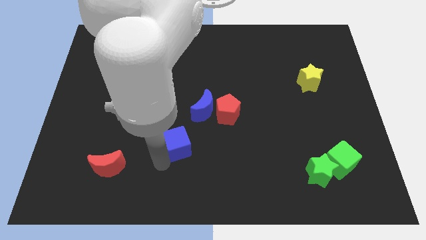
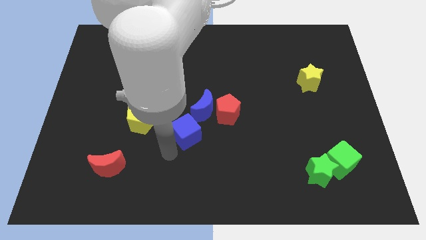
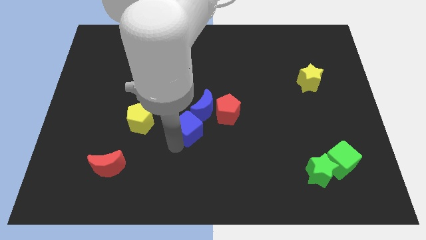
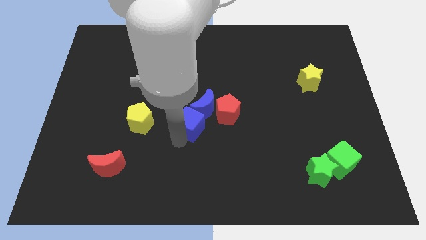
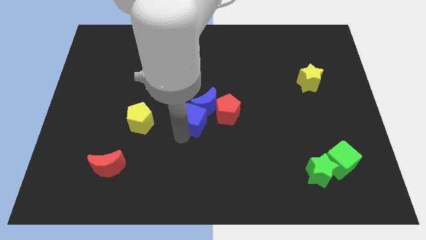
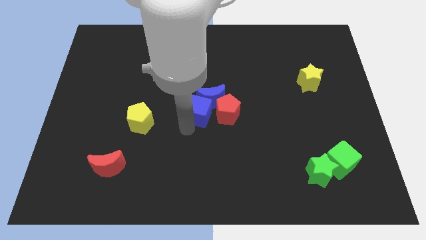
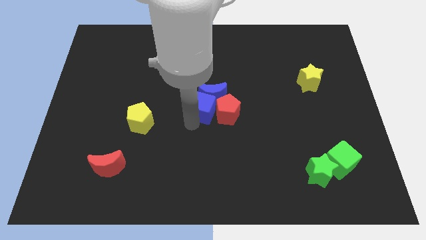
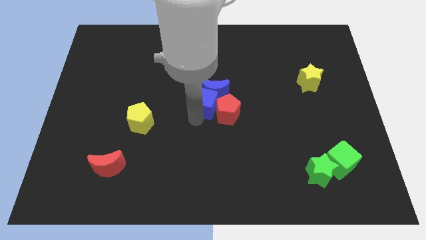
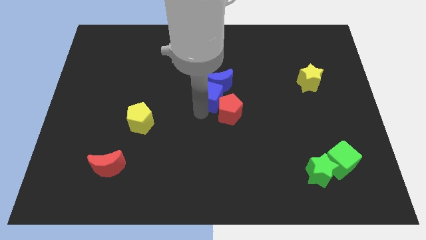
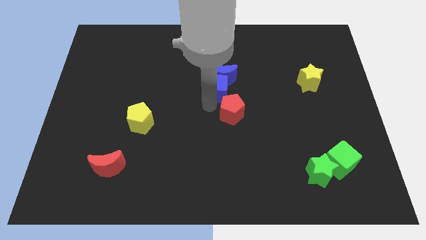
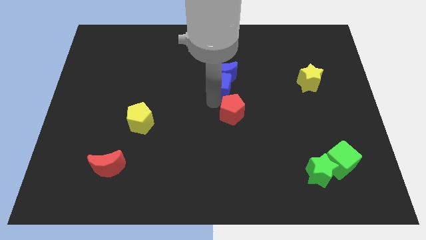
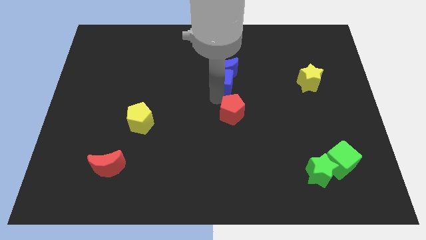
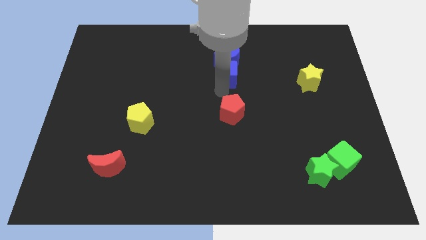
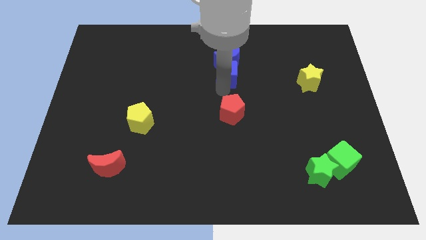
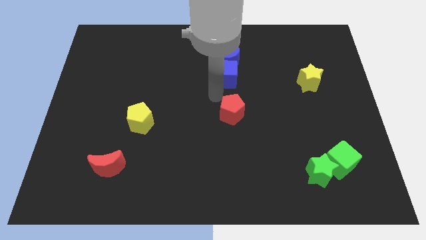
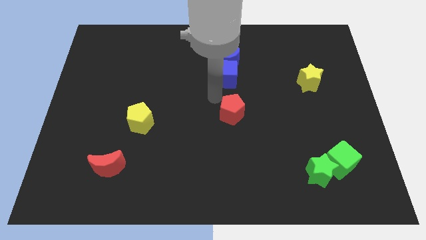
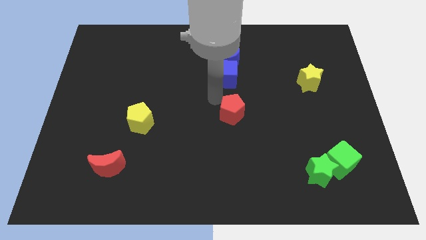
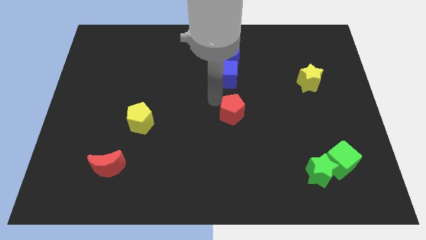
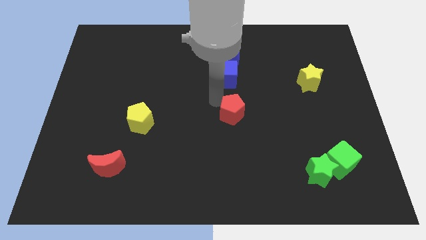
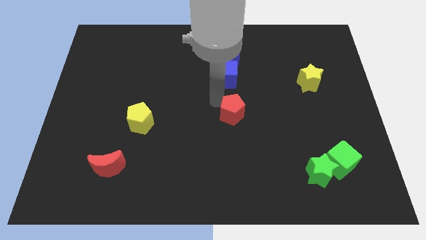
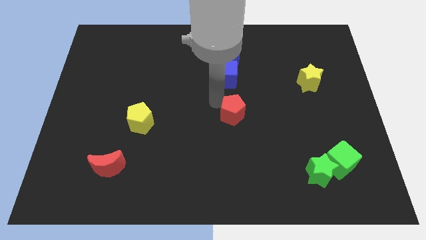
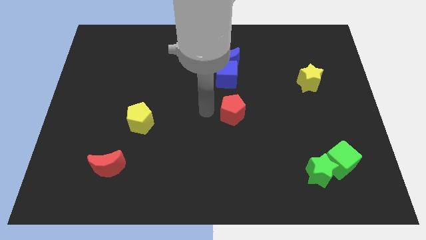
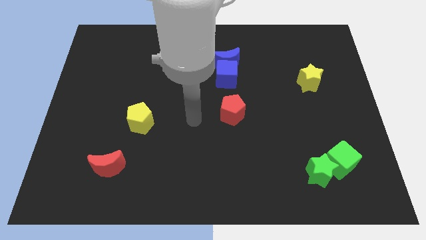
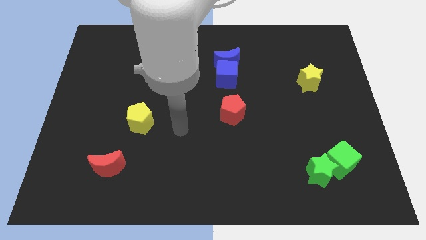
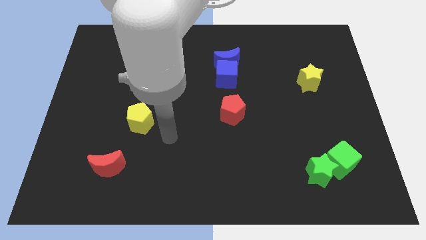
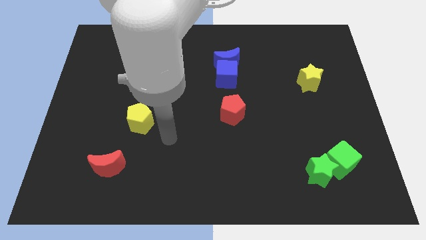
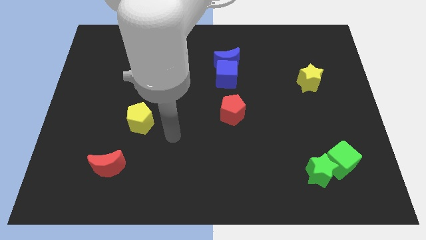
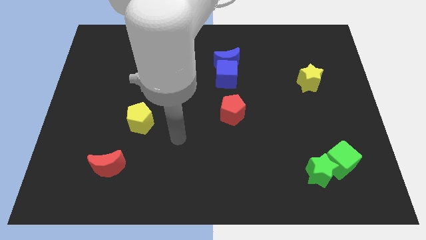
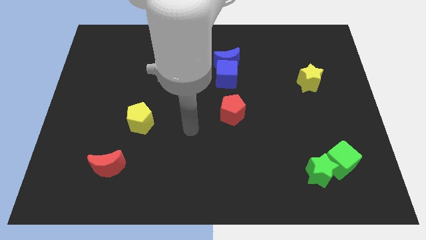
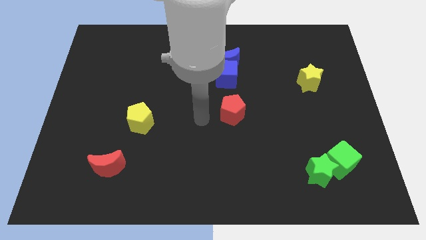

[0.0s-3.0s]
move the blue cube and blue moon towards the top side of the board

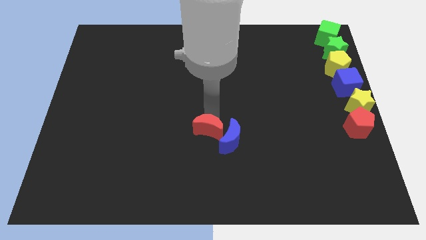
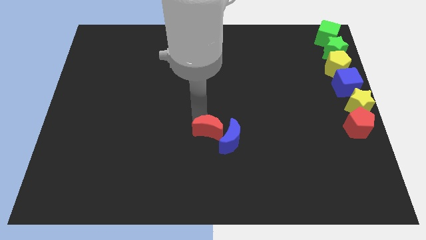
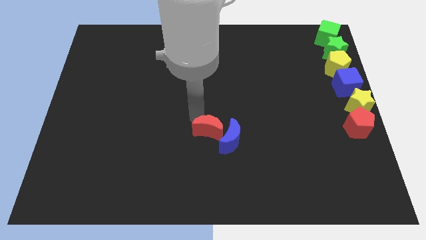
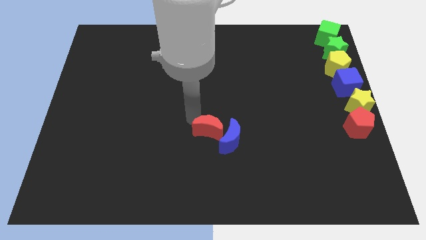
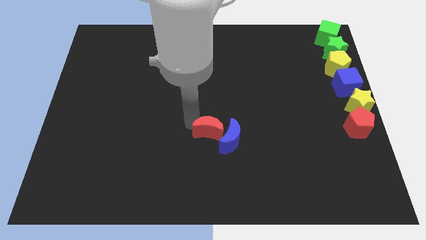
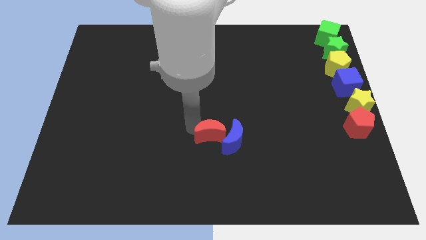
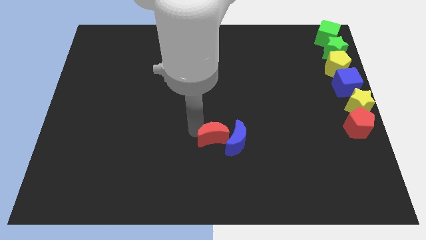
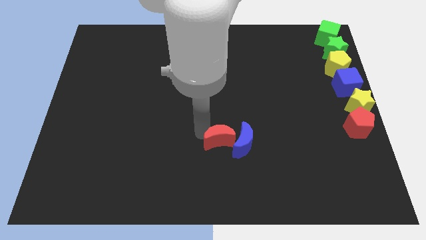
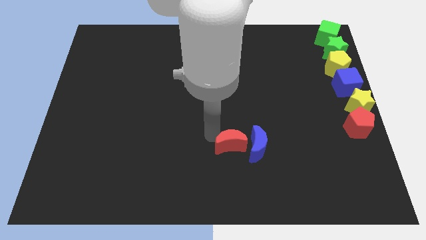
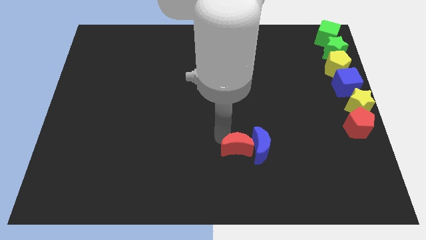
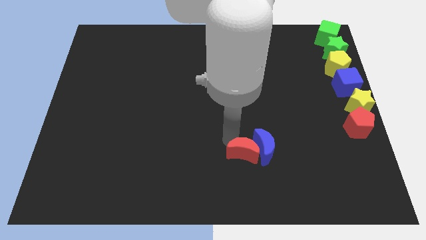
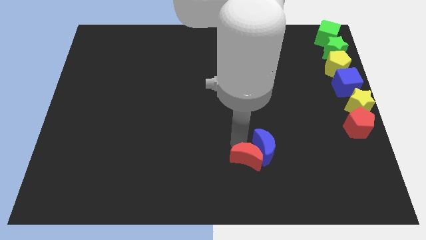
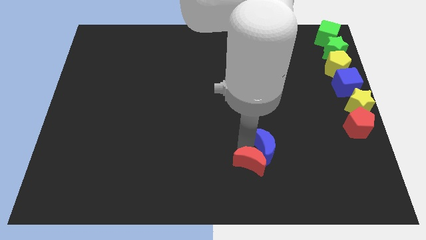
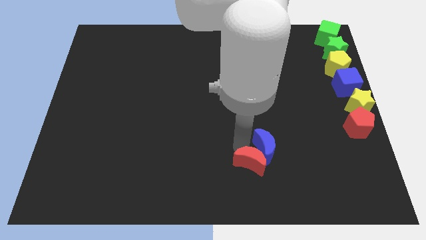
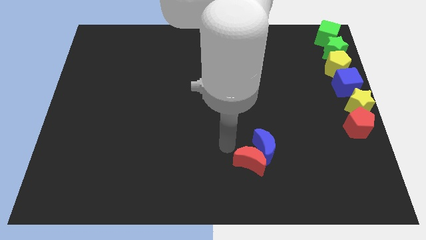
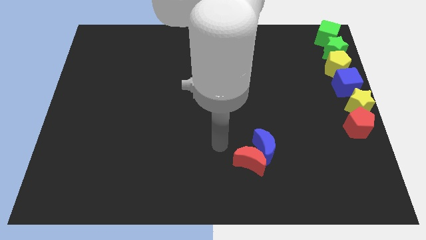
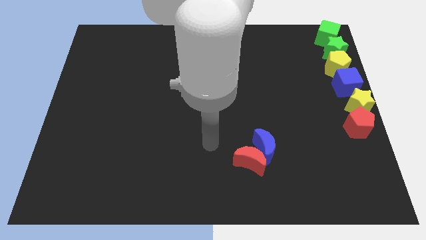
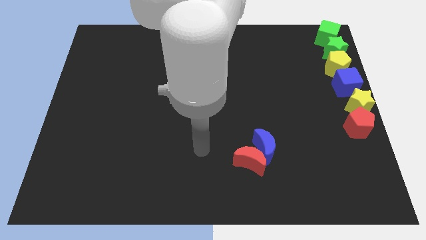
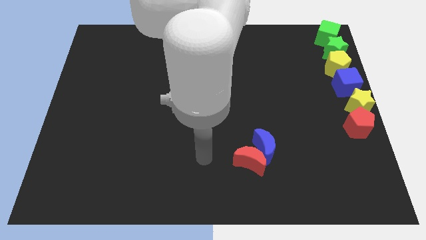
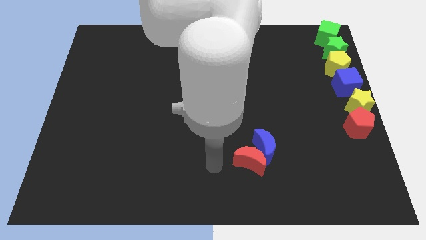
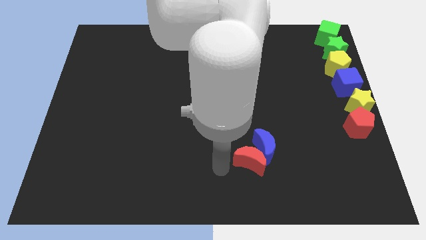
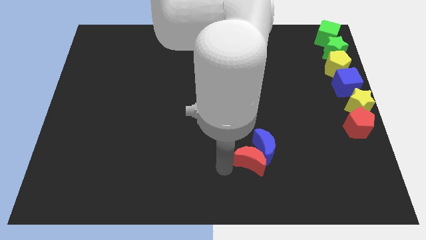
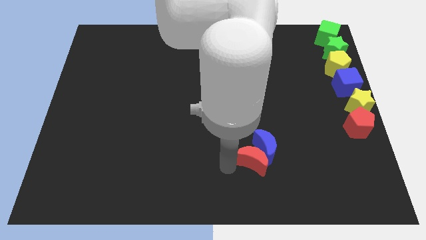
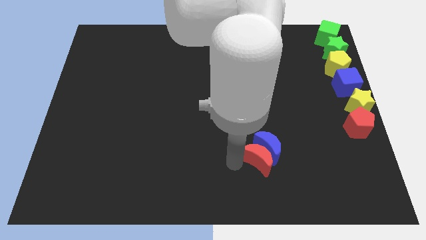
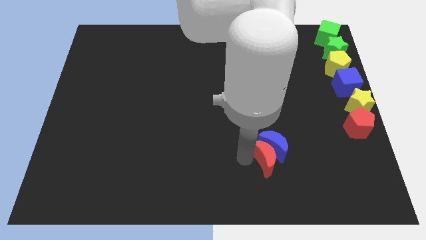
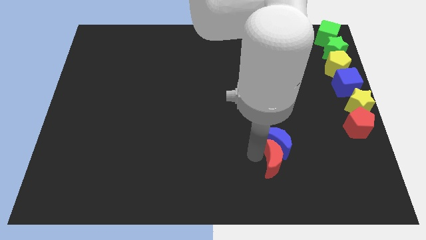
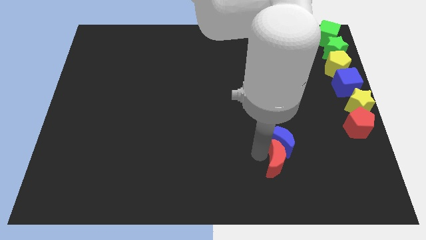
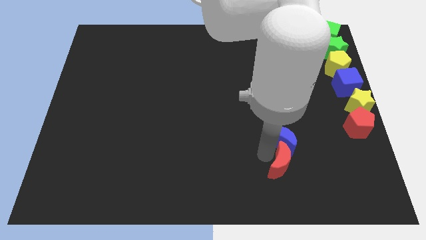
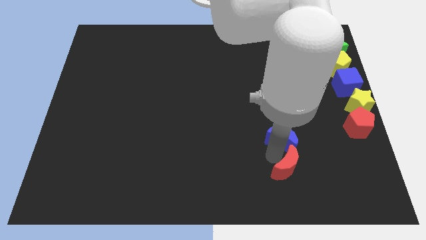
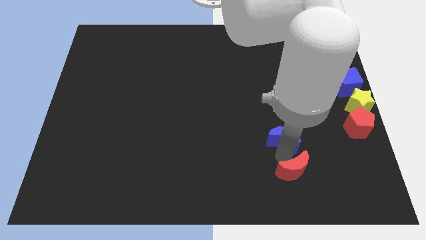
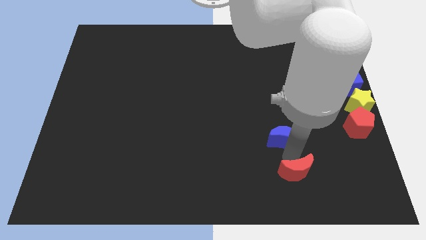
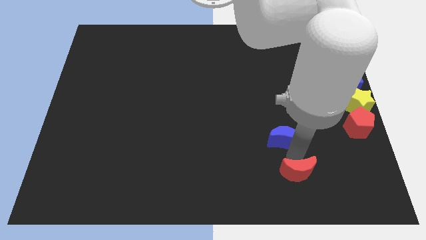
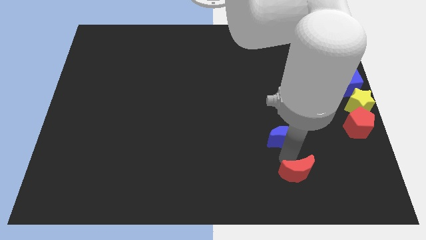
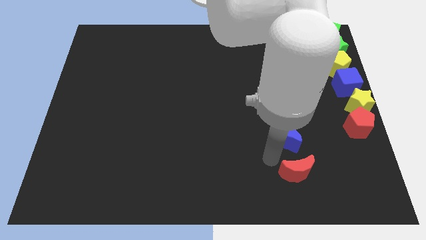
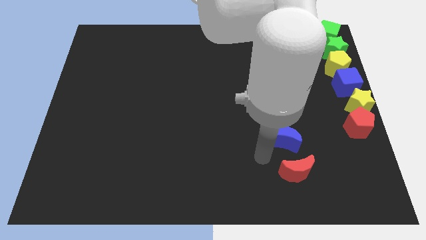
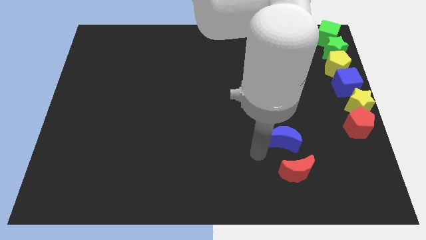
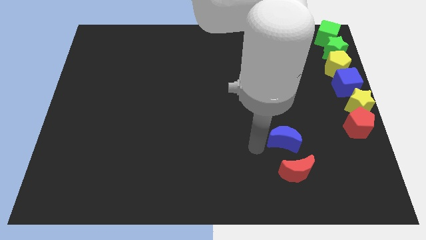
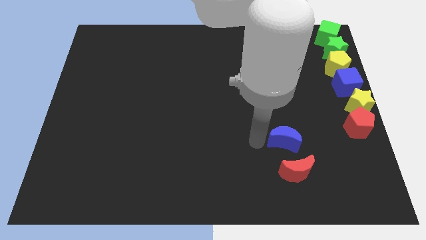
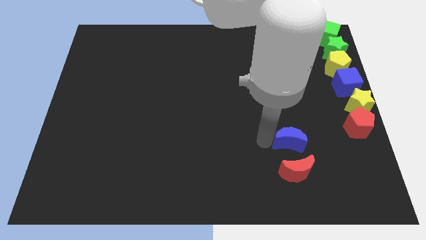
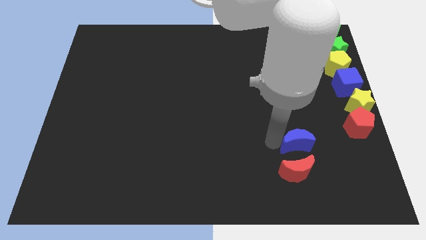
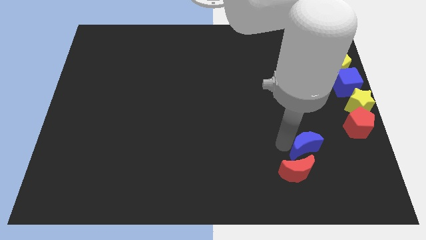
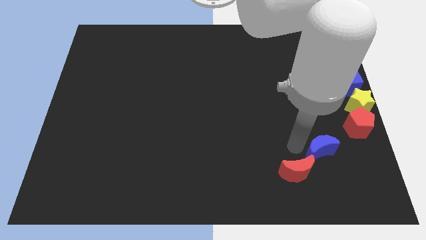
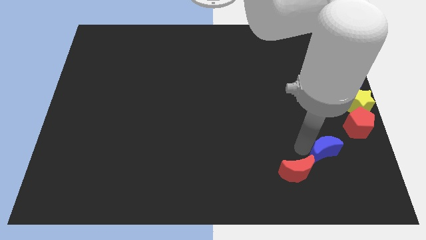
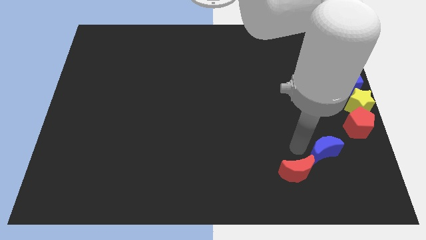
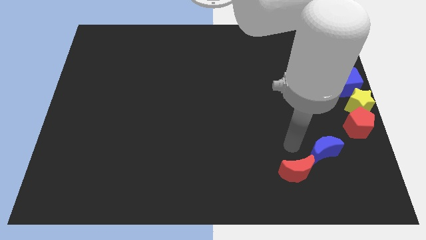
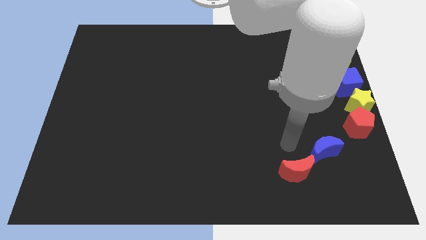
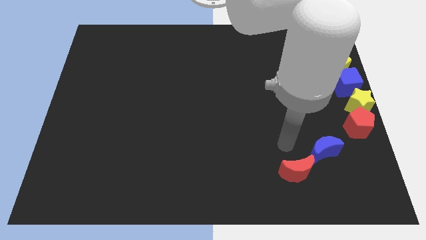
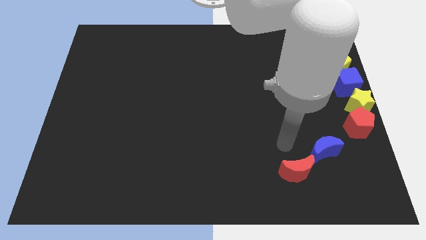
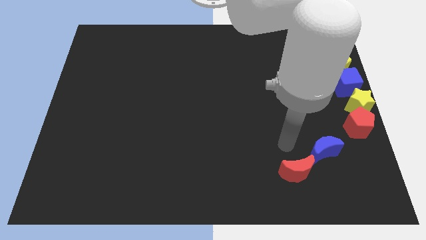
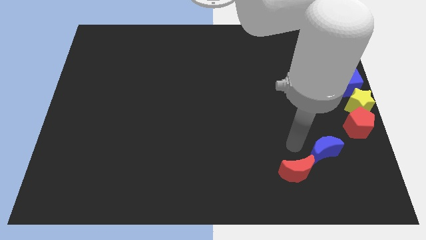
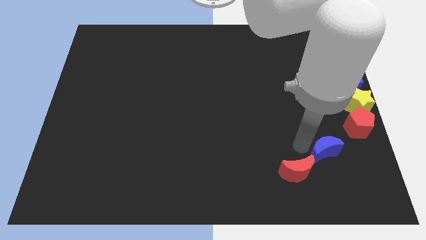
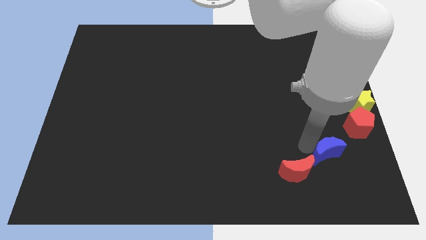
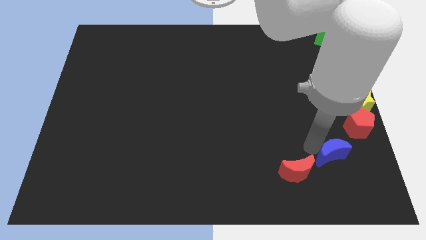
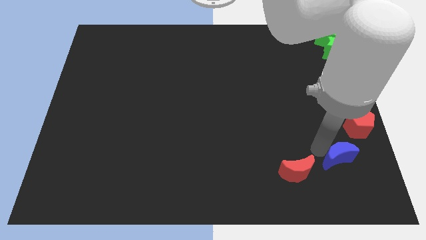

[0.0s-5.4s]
push the crescents to the bottom right of the board

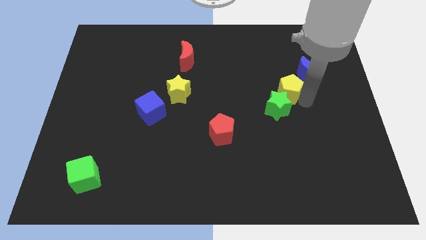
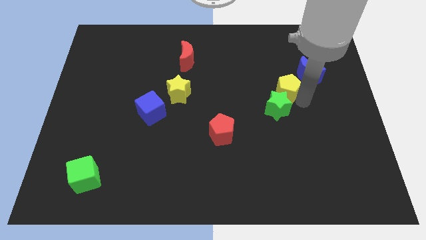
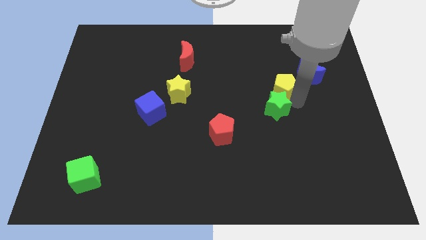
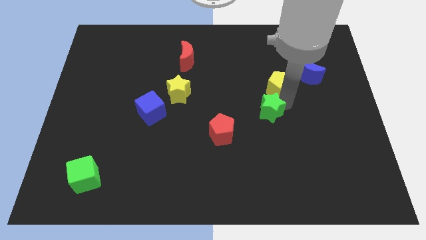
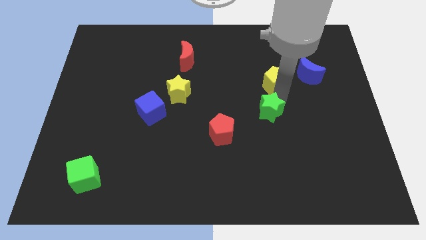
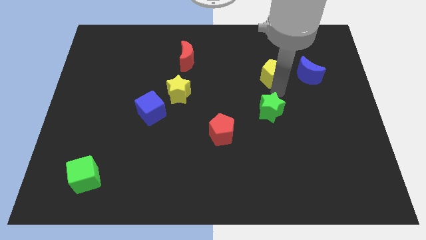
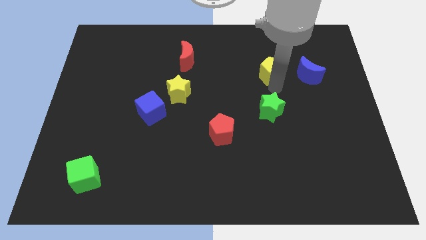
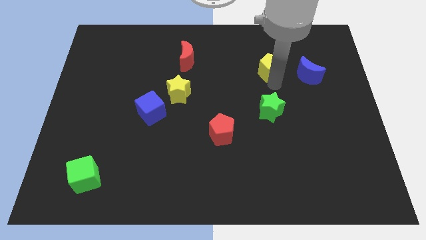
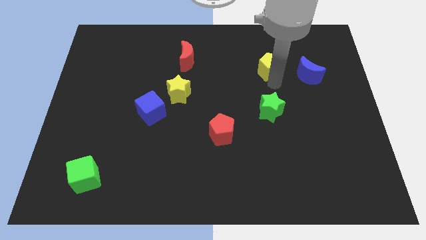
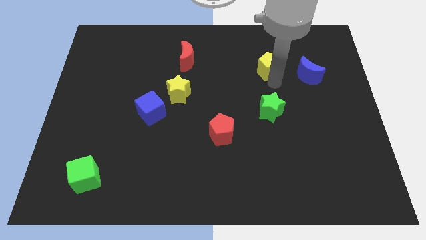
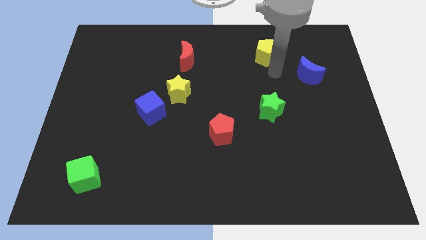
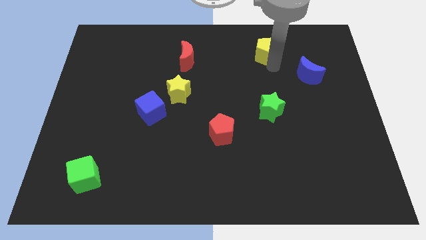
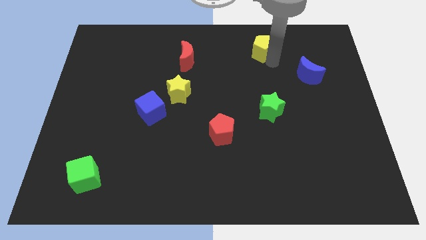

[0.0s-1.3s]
move yellow pentagon slightly up
